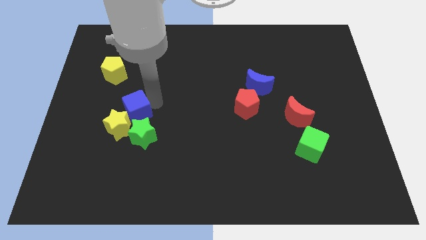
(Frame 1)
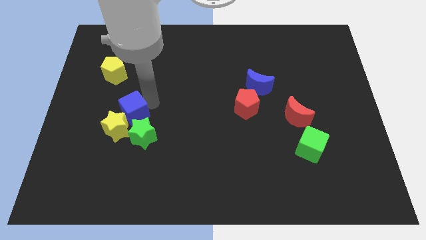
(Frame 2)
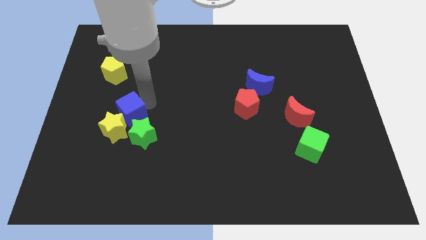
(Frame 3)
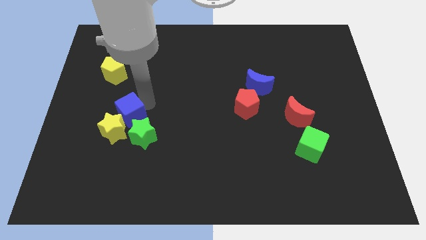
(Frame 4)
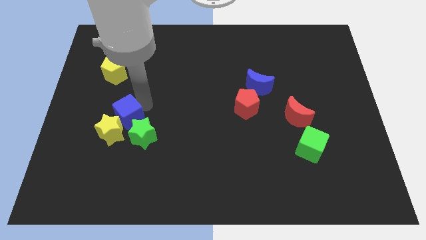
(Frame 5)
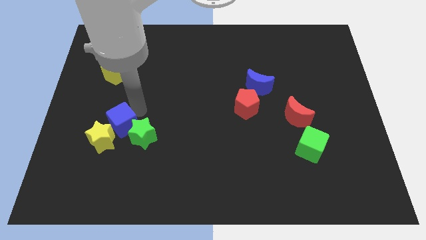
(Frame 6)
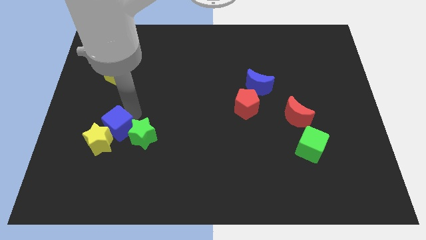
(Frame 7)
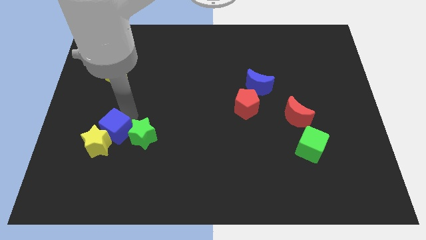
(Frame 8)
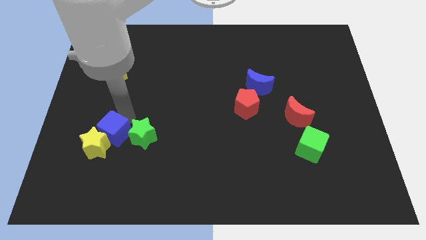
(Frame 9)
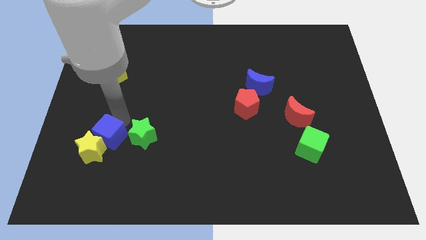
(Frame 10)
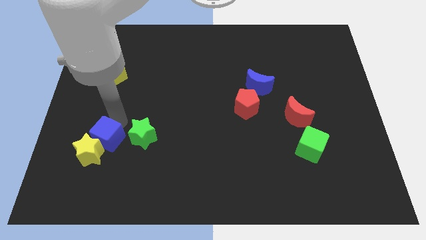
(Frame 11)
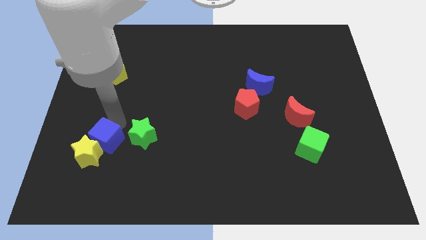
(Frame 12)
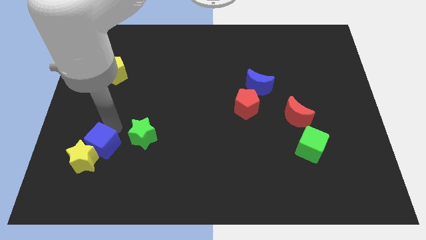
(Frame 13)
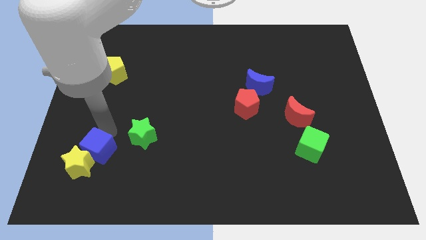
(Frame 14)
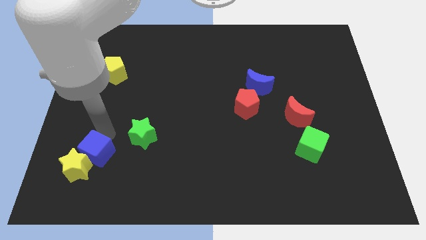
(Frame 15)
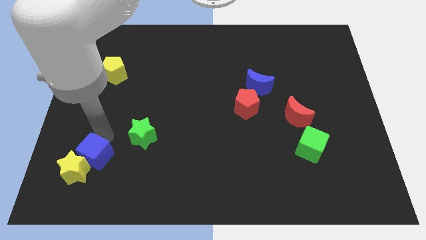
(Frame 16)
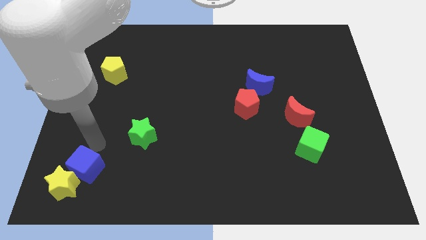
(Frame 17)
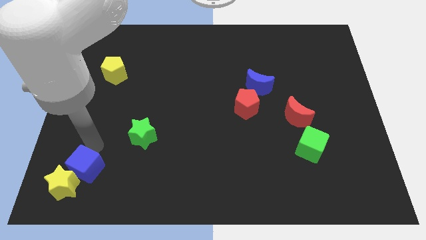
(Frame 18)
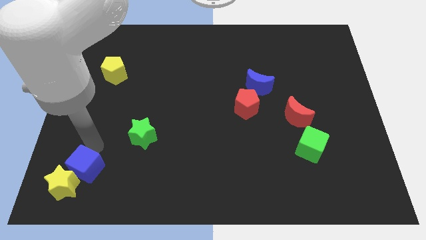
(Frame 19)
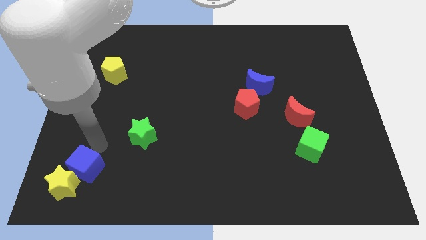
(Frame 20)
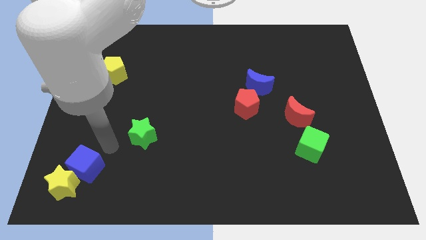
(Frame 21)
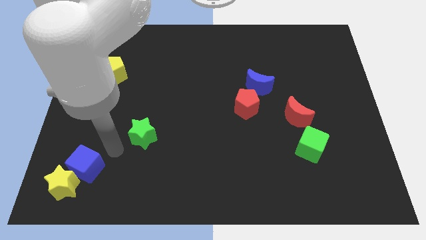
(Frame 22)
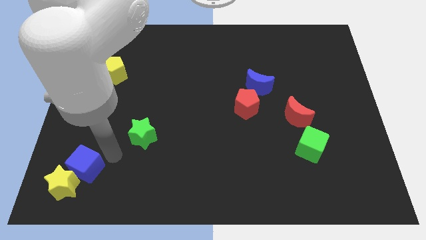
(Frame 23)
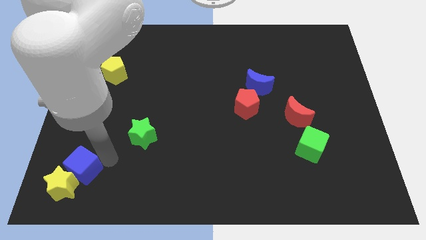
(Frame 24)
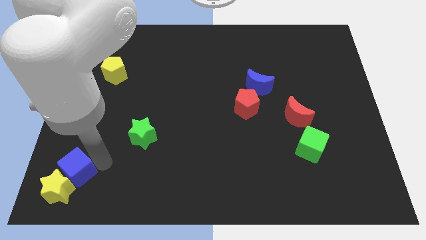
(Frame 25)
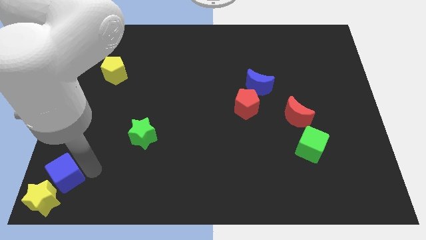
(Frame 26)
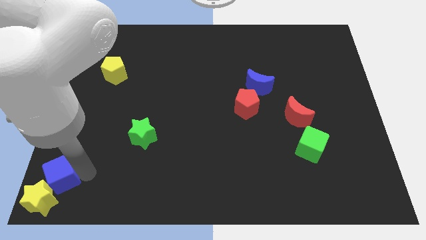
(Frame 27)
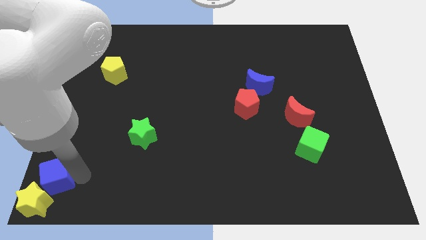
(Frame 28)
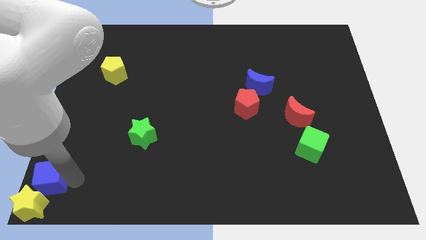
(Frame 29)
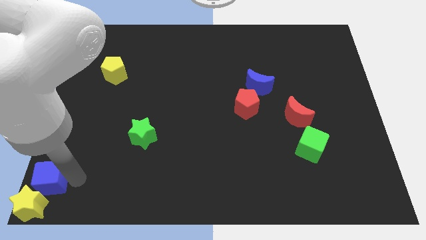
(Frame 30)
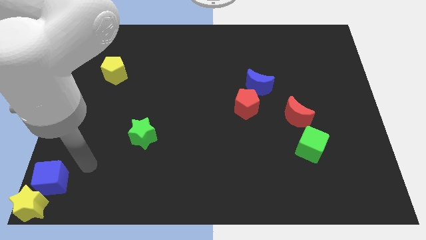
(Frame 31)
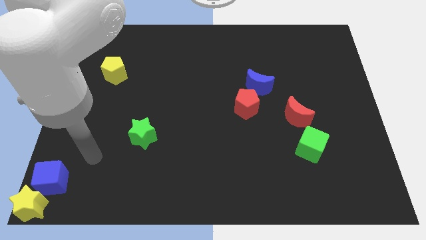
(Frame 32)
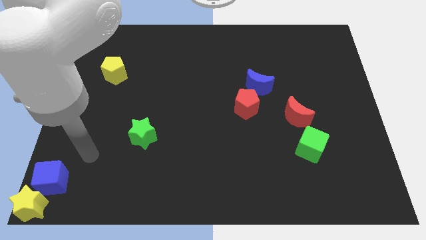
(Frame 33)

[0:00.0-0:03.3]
slide blue cube to the bottom left corner of the board along with the yellow star

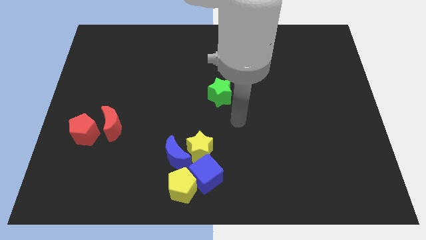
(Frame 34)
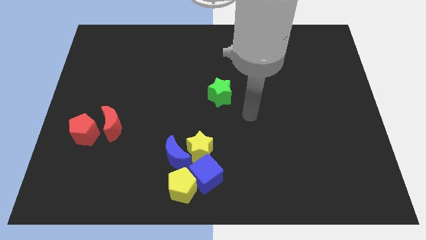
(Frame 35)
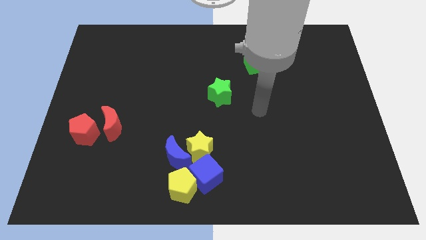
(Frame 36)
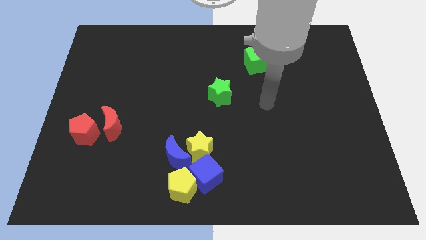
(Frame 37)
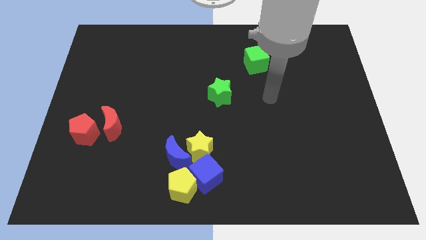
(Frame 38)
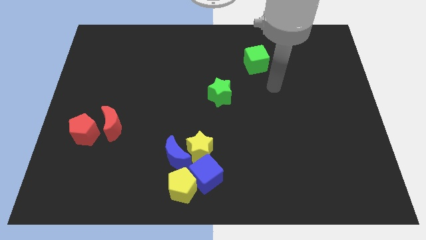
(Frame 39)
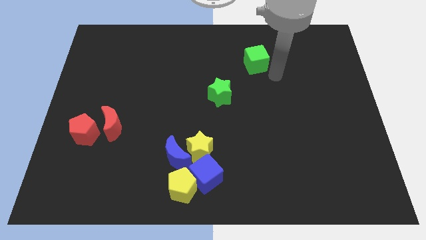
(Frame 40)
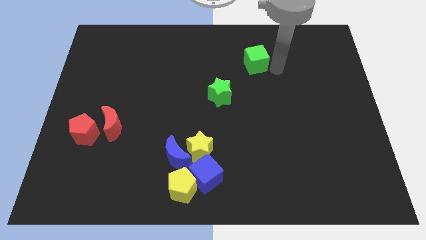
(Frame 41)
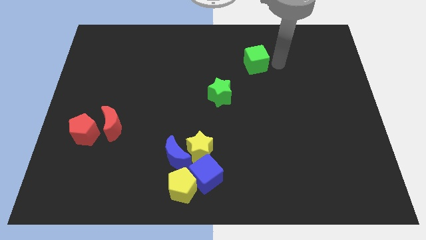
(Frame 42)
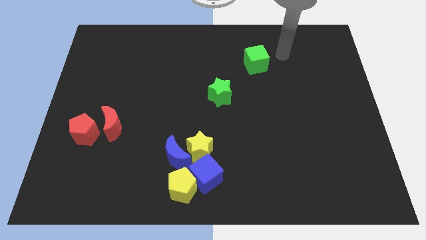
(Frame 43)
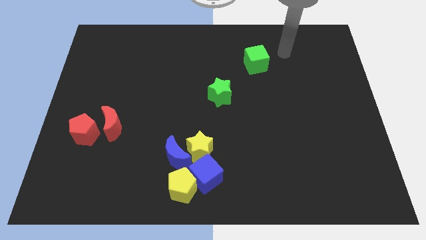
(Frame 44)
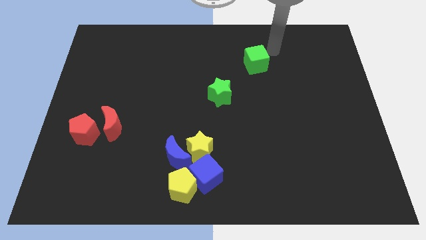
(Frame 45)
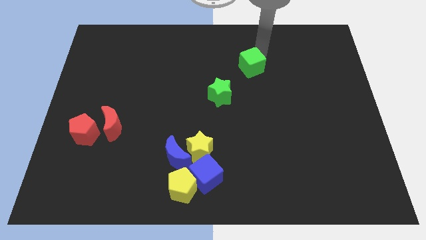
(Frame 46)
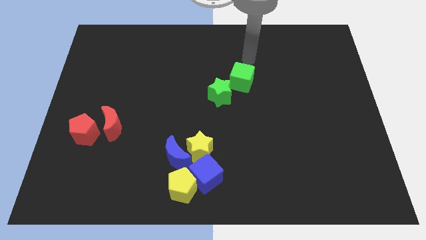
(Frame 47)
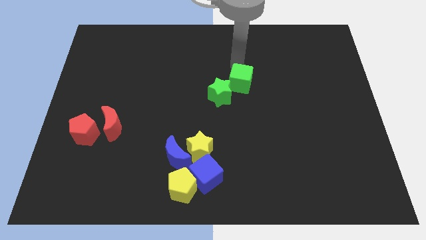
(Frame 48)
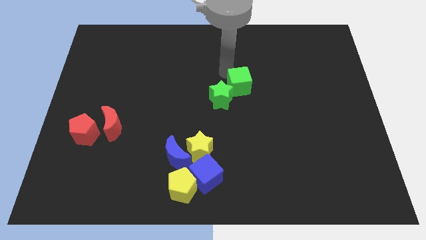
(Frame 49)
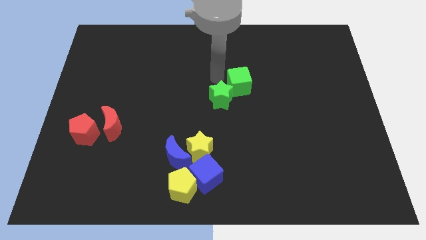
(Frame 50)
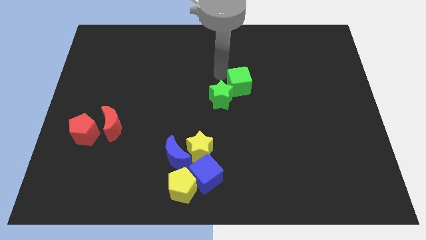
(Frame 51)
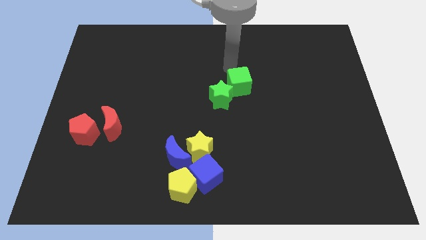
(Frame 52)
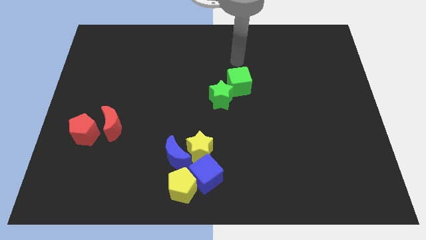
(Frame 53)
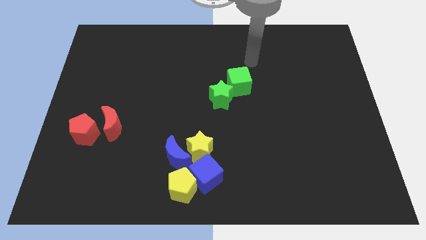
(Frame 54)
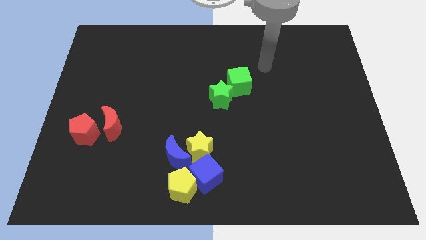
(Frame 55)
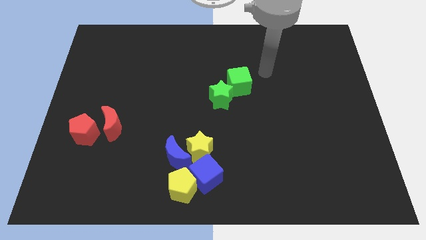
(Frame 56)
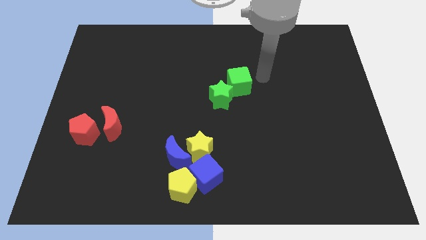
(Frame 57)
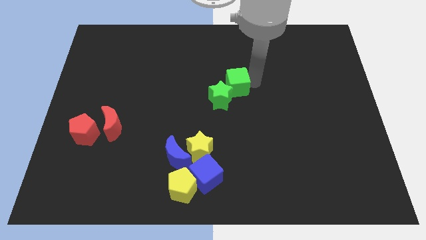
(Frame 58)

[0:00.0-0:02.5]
push the green cube into the green star

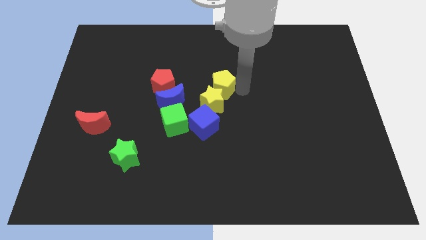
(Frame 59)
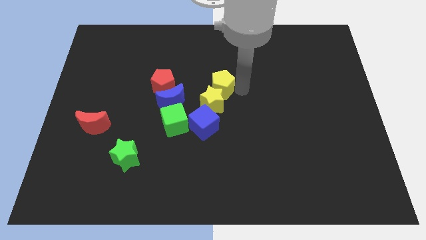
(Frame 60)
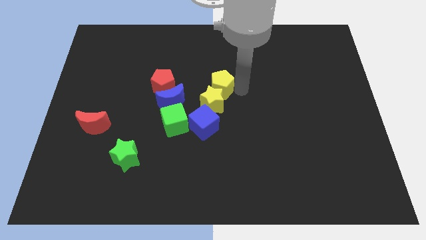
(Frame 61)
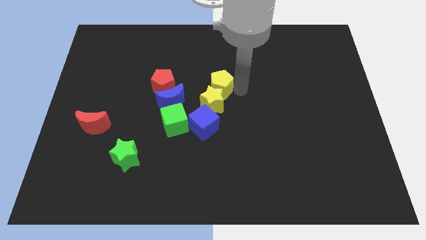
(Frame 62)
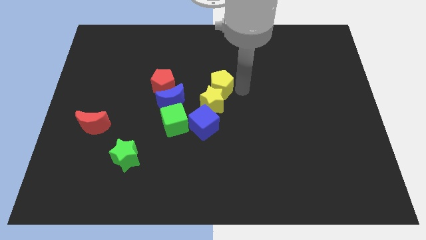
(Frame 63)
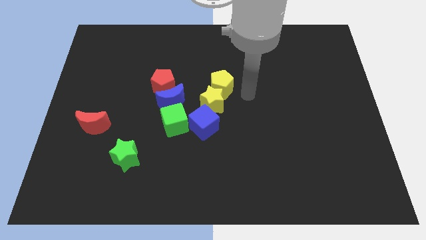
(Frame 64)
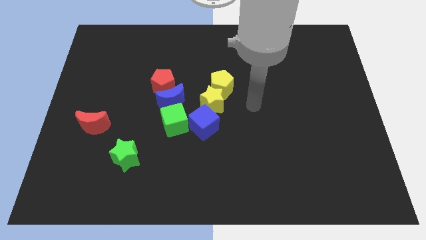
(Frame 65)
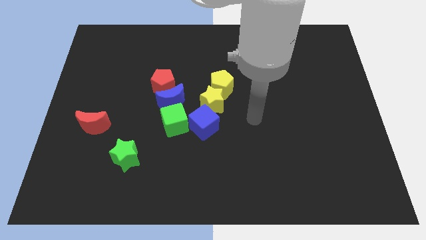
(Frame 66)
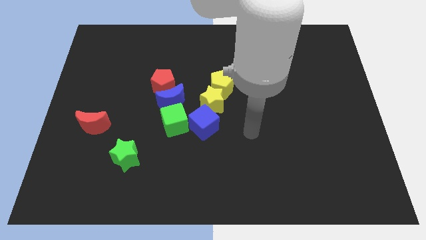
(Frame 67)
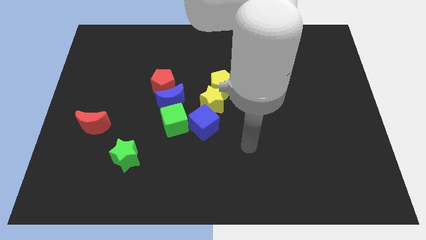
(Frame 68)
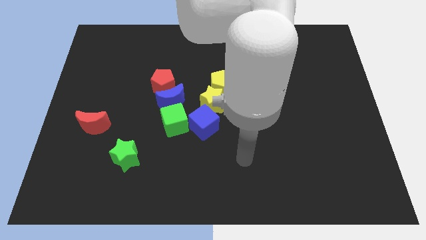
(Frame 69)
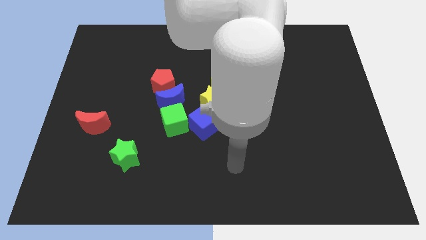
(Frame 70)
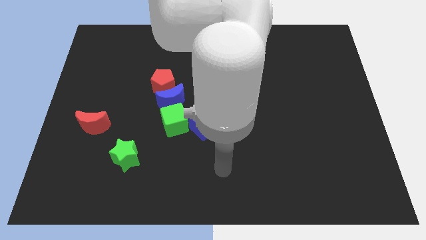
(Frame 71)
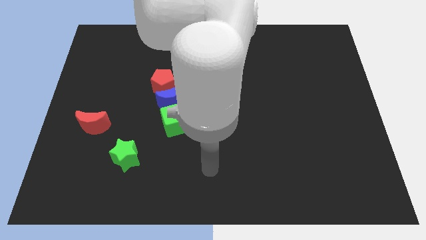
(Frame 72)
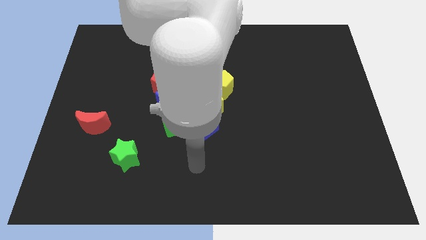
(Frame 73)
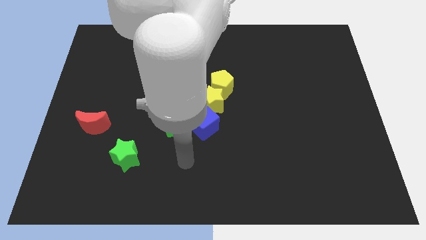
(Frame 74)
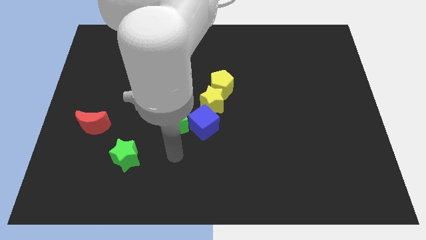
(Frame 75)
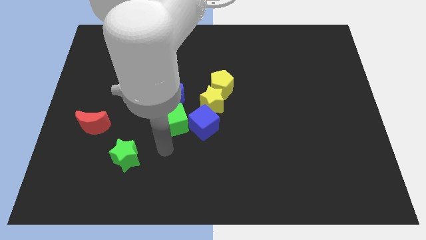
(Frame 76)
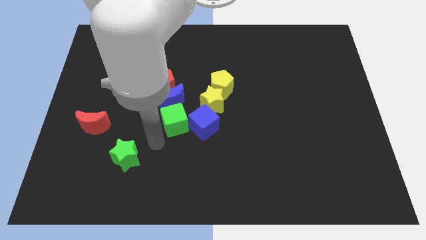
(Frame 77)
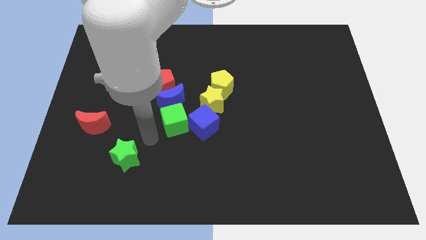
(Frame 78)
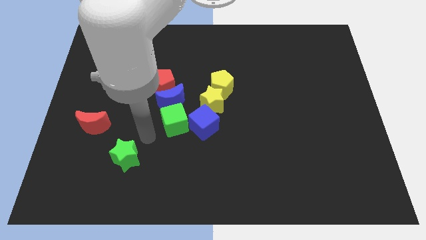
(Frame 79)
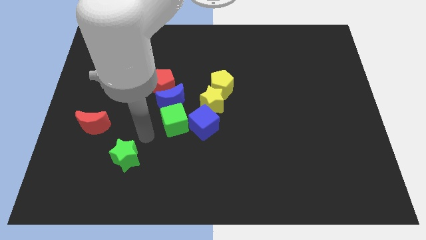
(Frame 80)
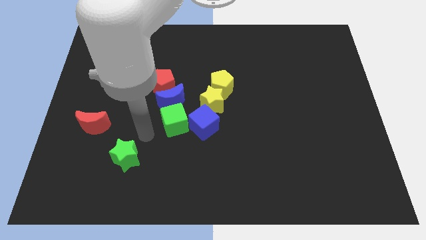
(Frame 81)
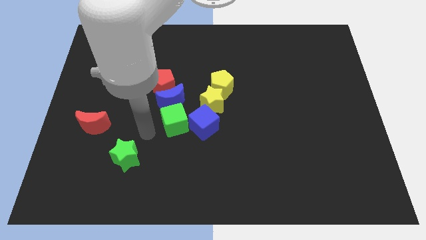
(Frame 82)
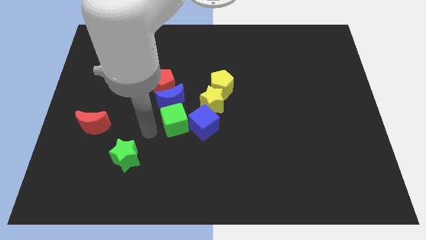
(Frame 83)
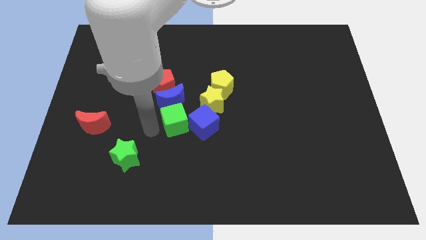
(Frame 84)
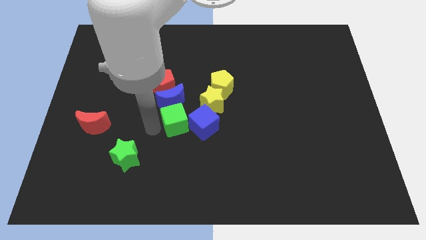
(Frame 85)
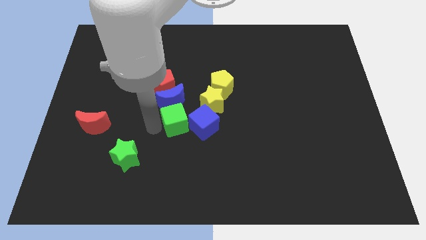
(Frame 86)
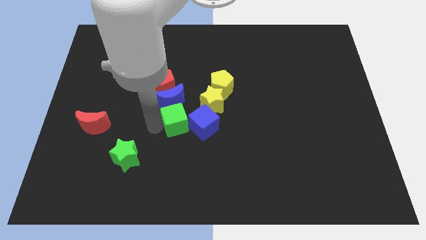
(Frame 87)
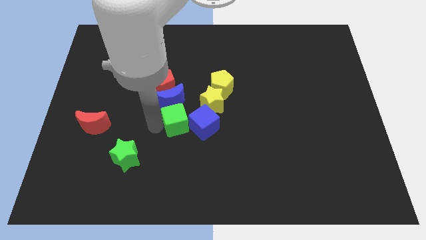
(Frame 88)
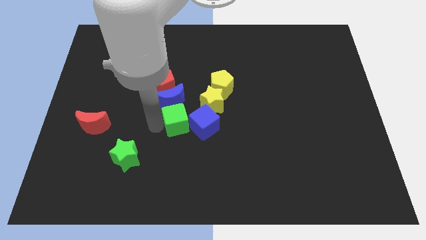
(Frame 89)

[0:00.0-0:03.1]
touch the left side of the green cube
